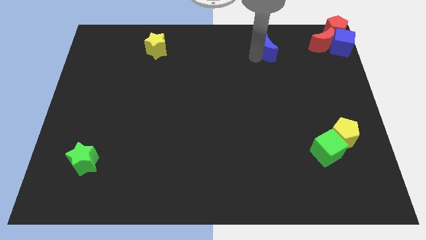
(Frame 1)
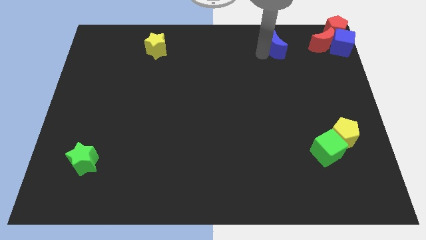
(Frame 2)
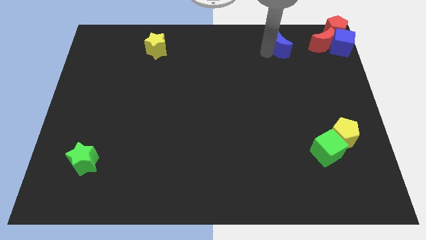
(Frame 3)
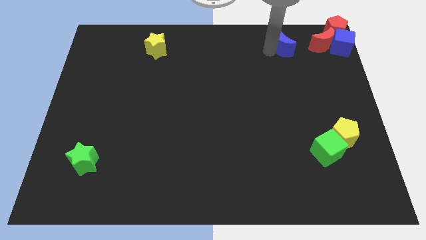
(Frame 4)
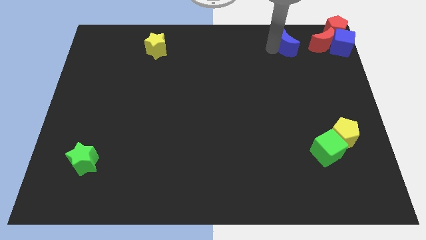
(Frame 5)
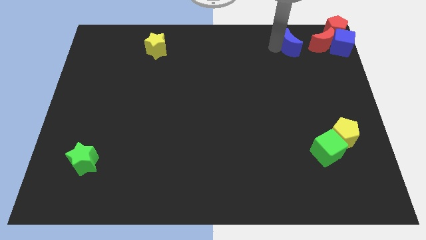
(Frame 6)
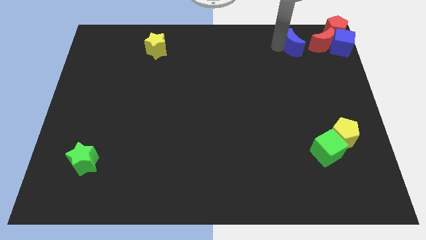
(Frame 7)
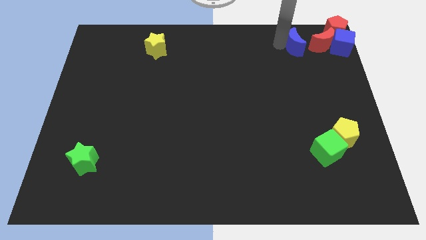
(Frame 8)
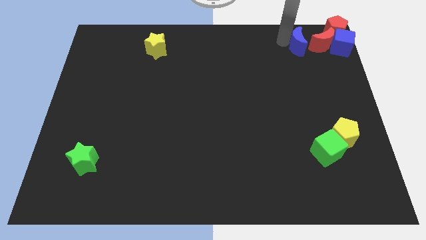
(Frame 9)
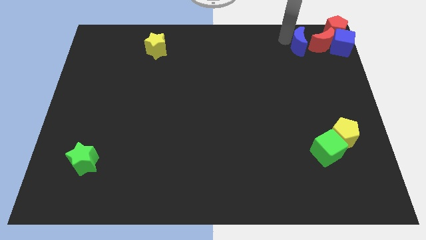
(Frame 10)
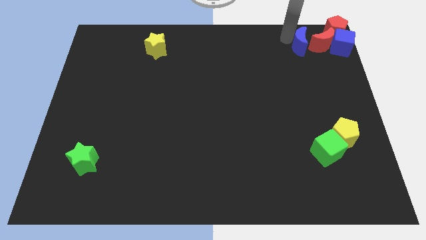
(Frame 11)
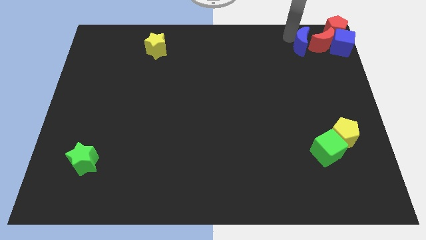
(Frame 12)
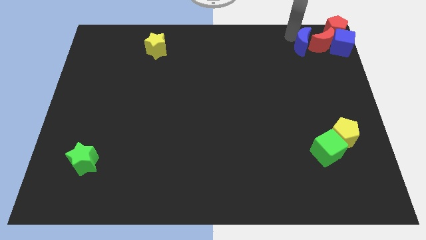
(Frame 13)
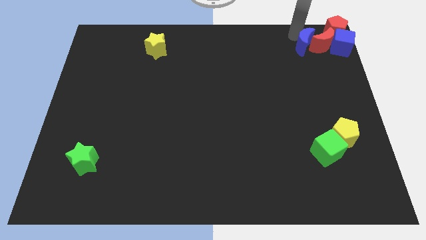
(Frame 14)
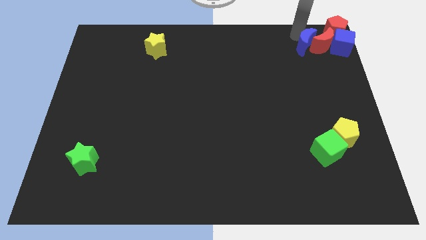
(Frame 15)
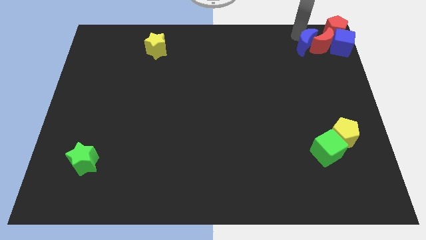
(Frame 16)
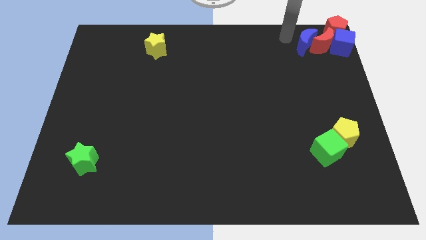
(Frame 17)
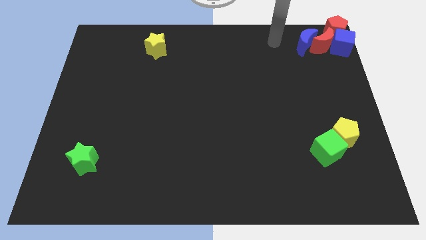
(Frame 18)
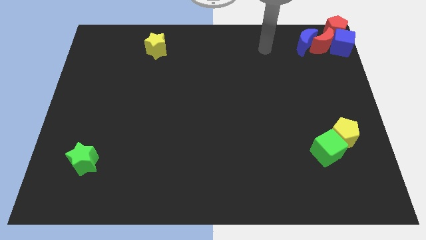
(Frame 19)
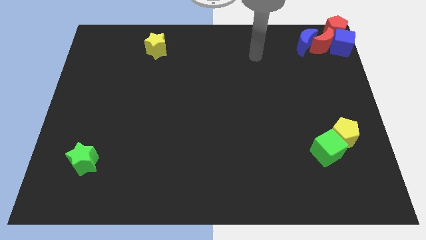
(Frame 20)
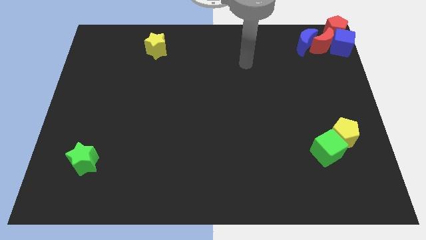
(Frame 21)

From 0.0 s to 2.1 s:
place the blue crescent left to the red crescent

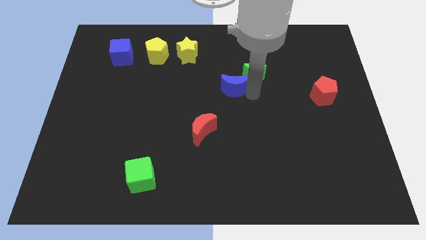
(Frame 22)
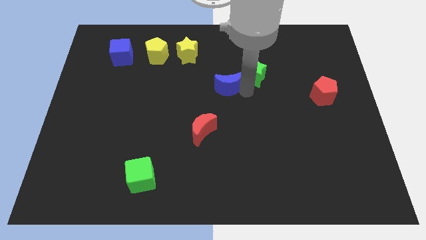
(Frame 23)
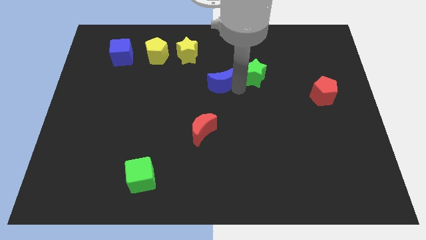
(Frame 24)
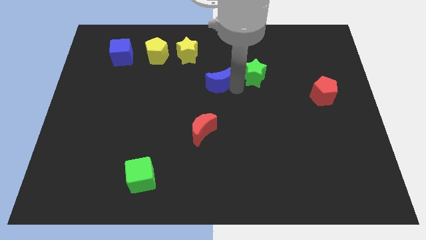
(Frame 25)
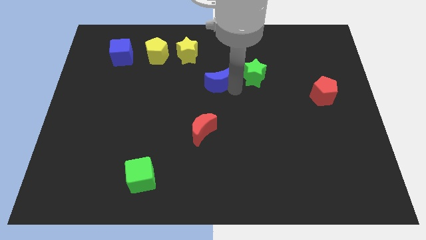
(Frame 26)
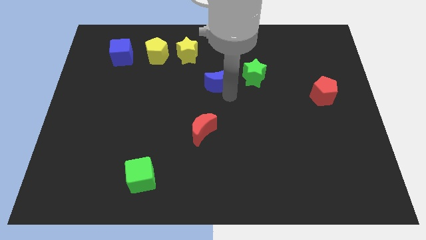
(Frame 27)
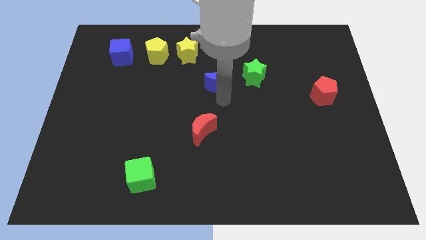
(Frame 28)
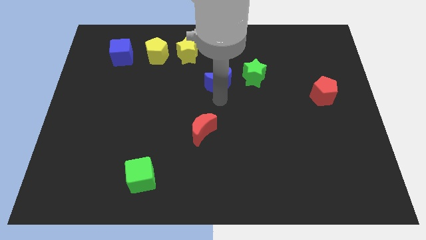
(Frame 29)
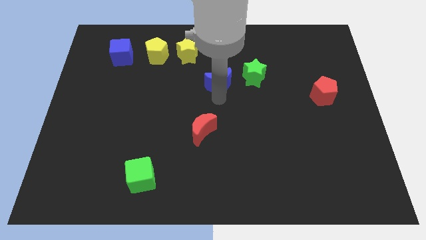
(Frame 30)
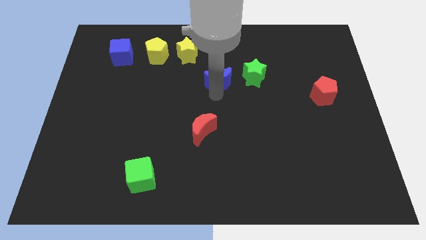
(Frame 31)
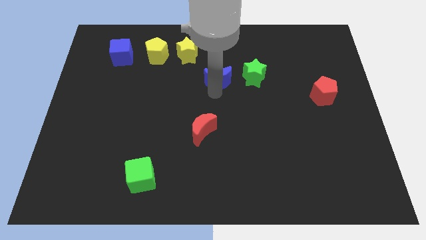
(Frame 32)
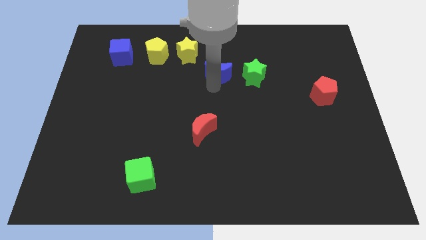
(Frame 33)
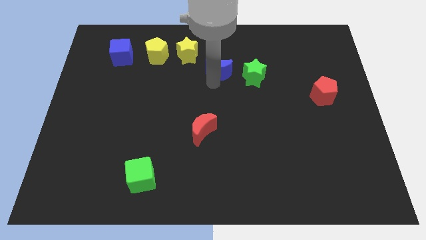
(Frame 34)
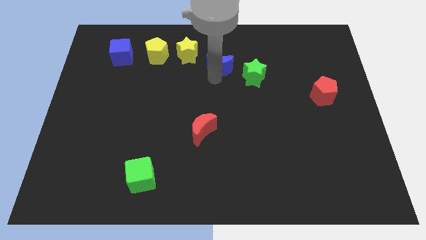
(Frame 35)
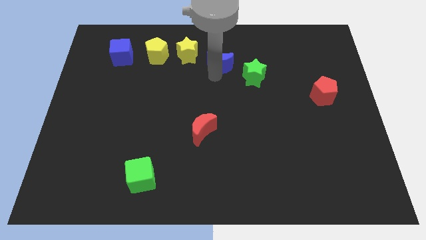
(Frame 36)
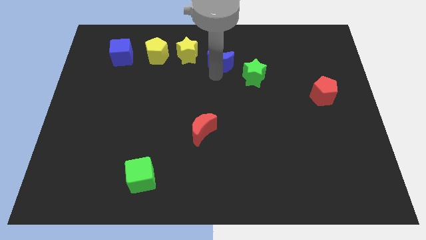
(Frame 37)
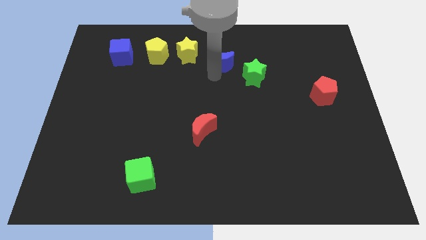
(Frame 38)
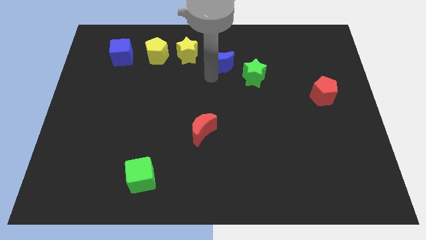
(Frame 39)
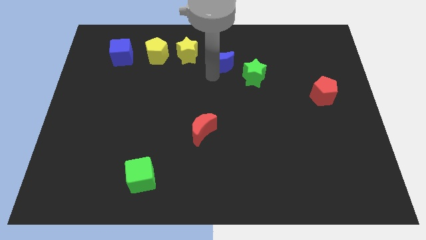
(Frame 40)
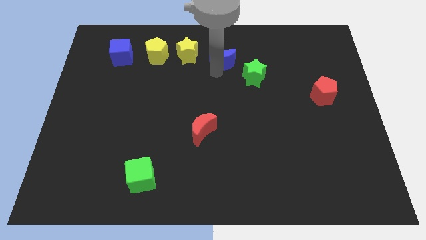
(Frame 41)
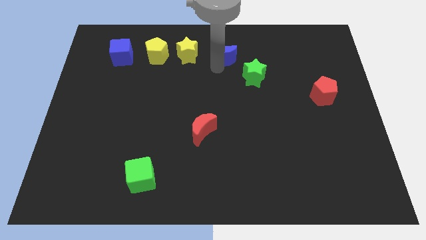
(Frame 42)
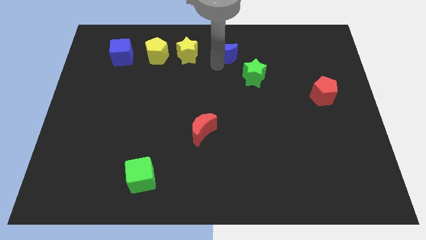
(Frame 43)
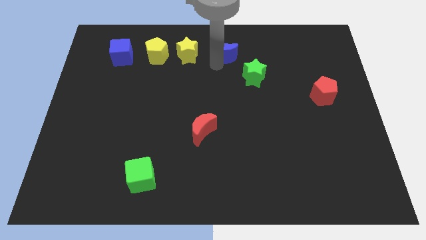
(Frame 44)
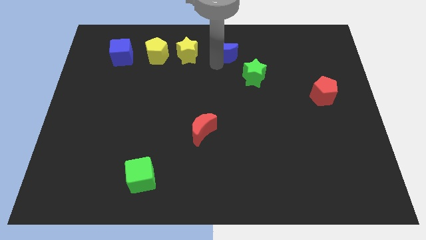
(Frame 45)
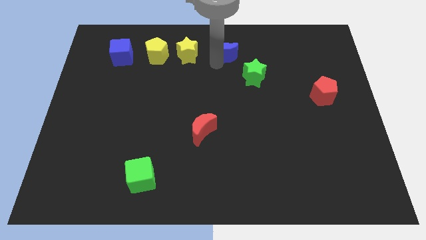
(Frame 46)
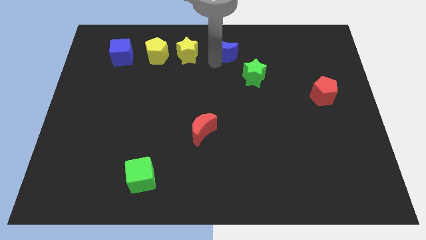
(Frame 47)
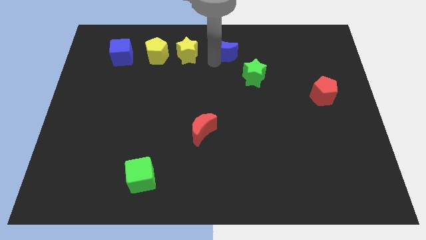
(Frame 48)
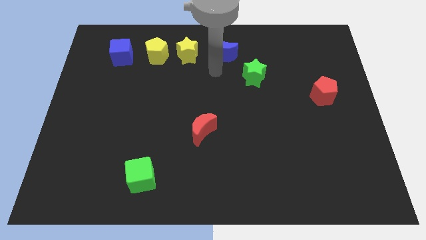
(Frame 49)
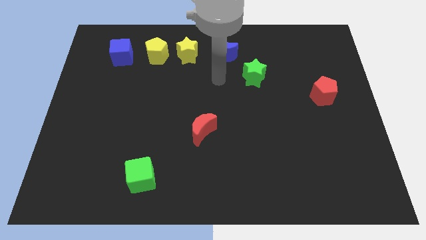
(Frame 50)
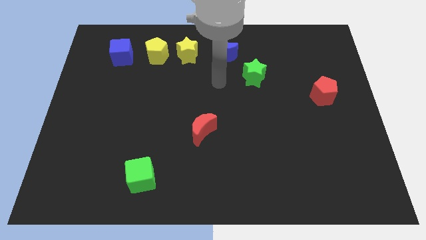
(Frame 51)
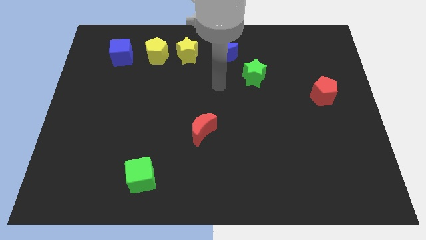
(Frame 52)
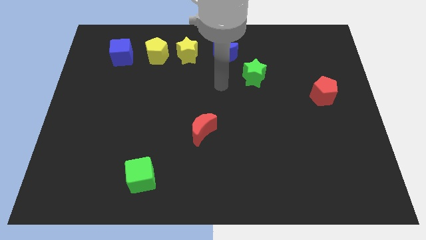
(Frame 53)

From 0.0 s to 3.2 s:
push the blue moon towards the top center of the board

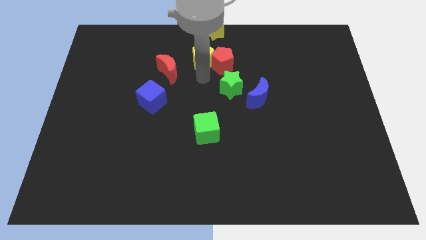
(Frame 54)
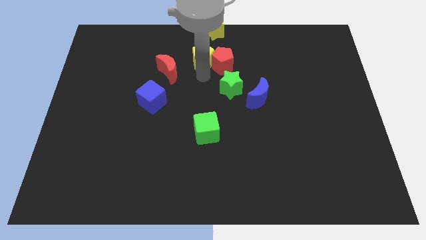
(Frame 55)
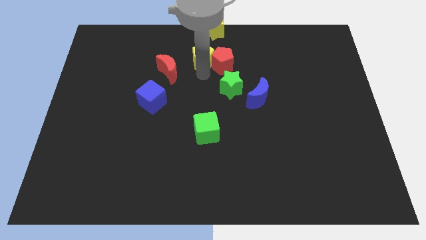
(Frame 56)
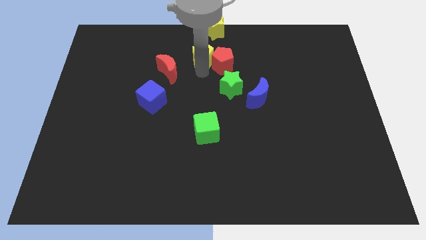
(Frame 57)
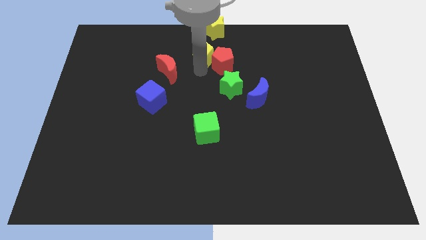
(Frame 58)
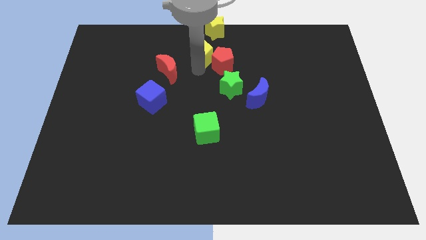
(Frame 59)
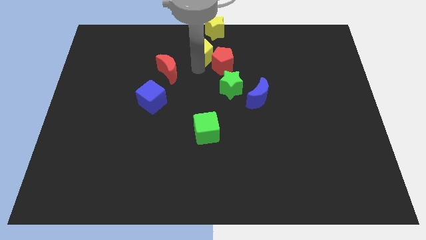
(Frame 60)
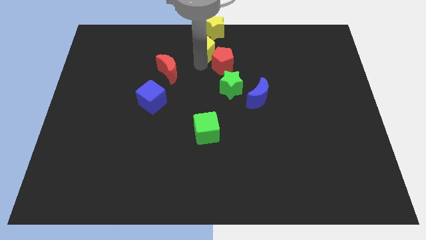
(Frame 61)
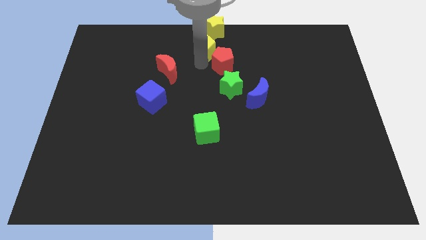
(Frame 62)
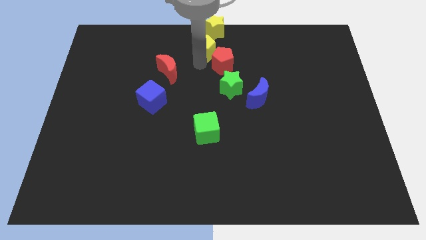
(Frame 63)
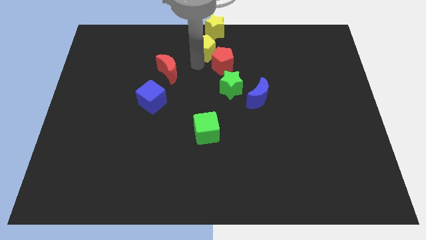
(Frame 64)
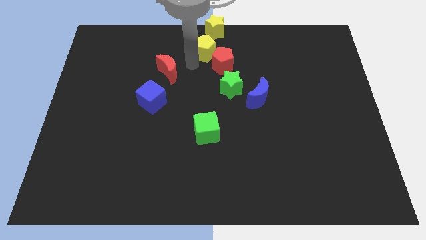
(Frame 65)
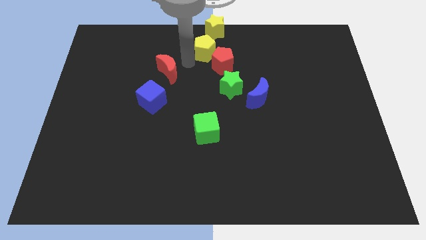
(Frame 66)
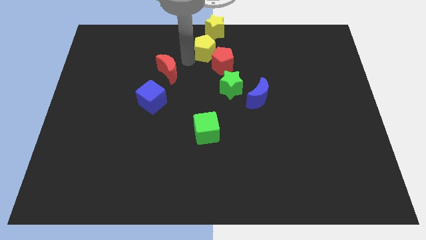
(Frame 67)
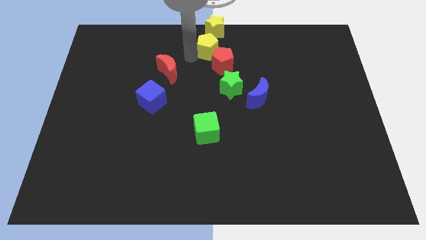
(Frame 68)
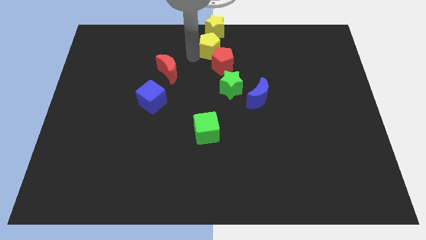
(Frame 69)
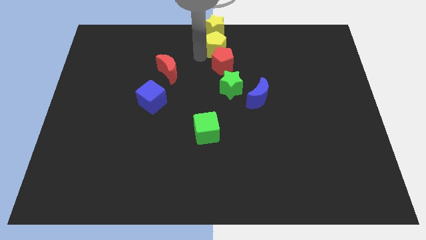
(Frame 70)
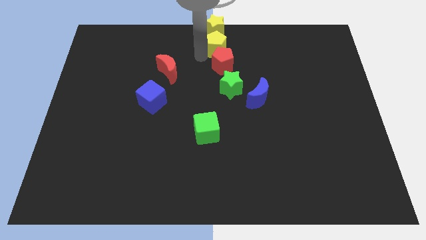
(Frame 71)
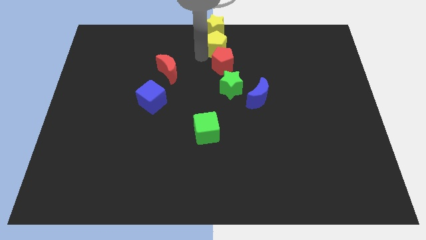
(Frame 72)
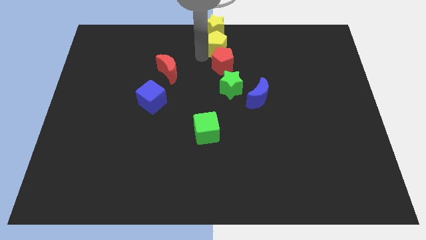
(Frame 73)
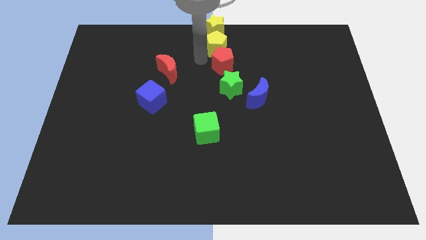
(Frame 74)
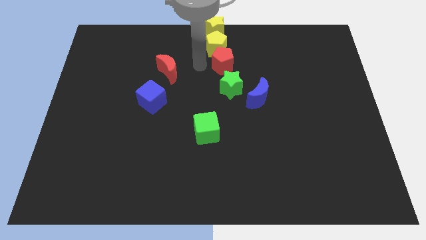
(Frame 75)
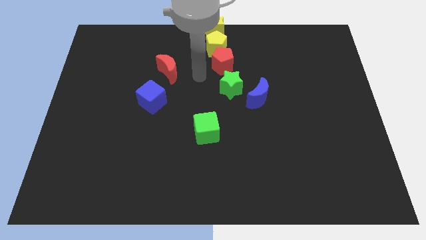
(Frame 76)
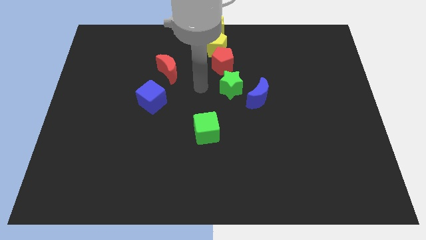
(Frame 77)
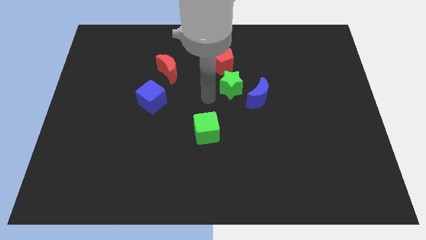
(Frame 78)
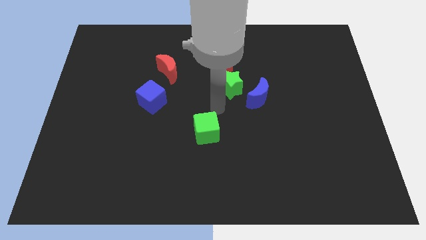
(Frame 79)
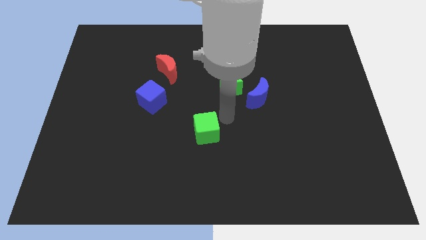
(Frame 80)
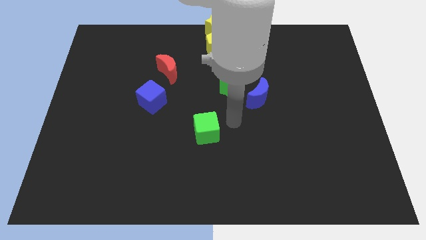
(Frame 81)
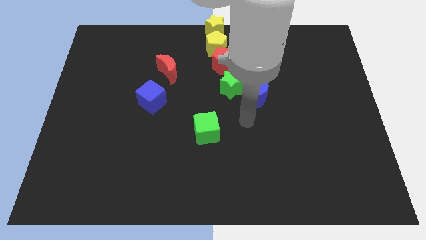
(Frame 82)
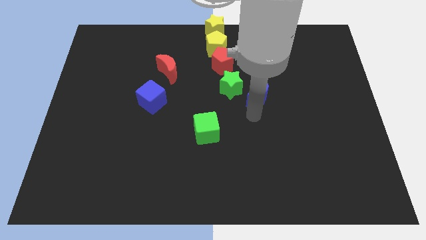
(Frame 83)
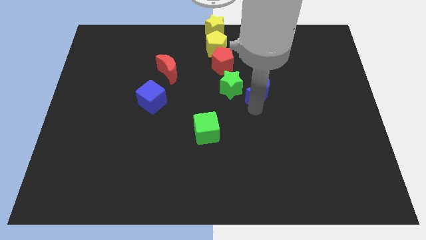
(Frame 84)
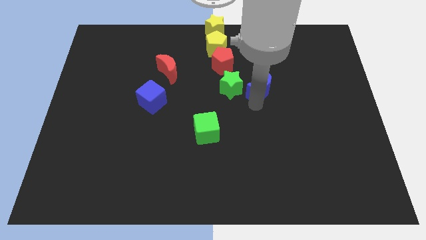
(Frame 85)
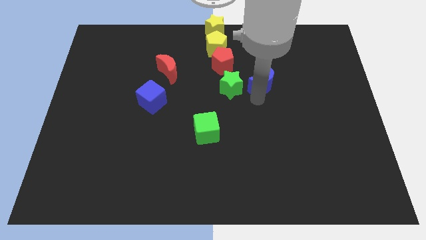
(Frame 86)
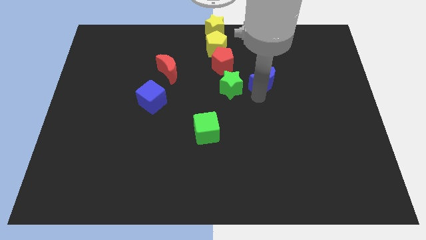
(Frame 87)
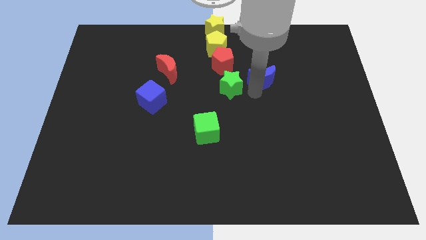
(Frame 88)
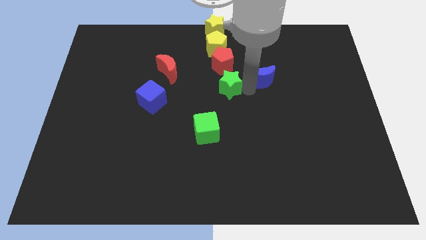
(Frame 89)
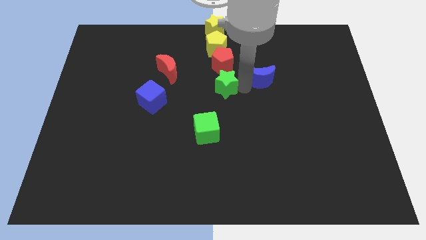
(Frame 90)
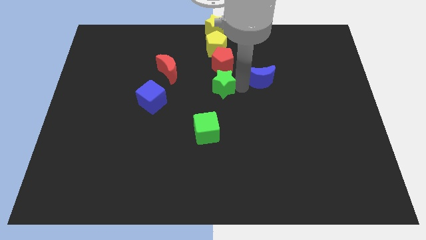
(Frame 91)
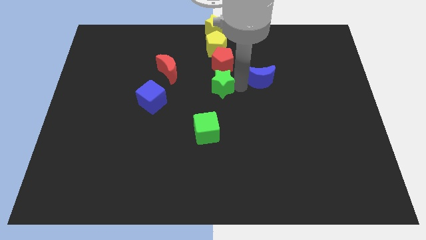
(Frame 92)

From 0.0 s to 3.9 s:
place green star below red pentagon
